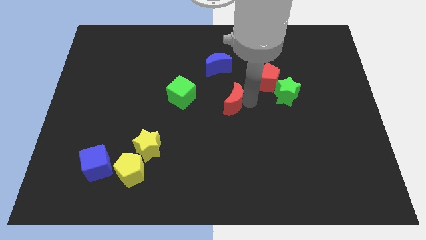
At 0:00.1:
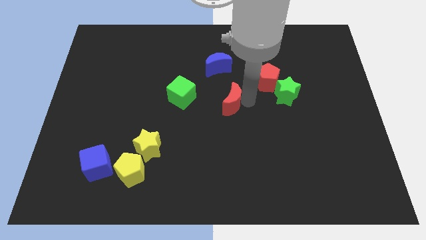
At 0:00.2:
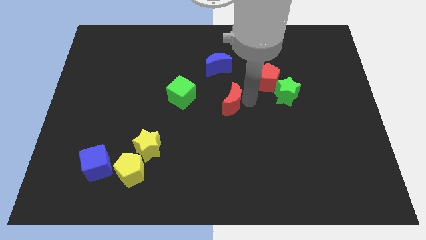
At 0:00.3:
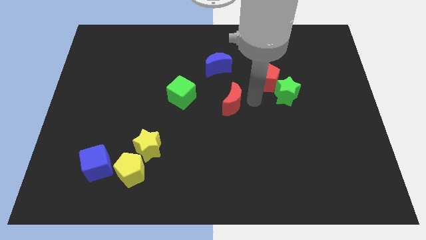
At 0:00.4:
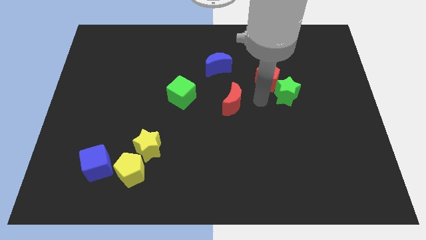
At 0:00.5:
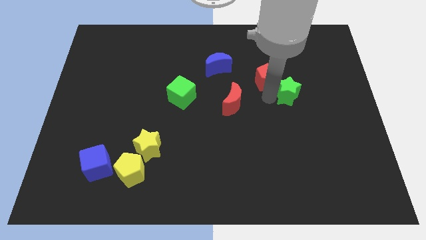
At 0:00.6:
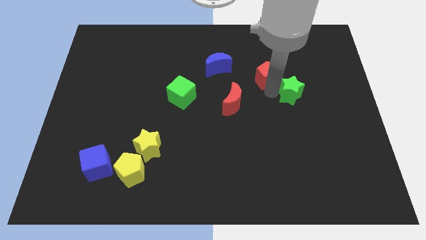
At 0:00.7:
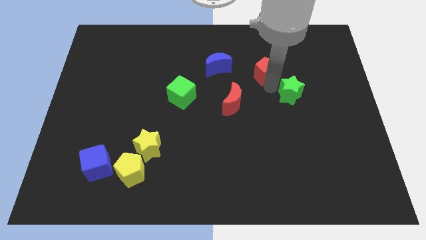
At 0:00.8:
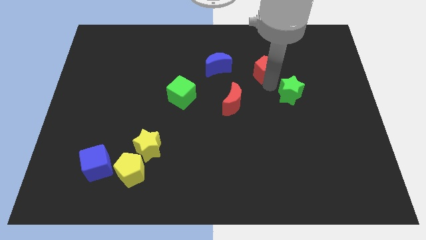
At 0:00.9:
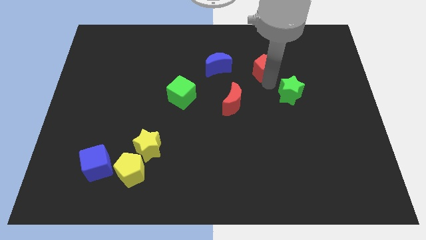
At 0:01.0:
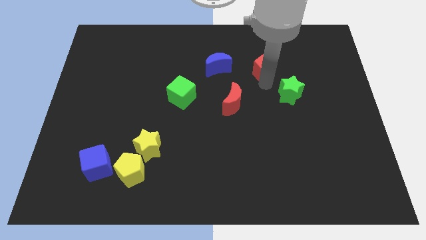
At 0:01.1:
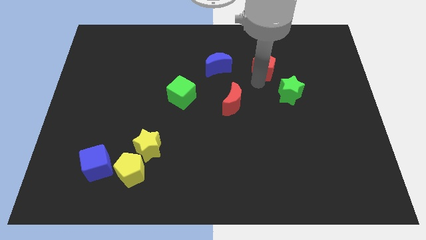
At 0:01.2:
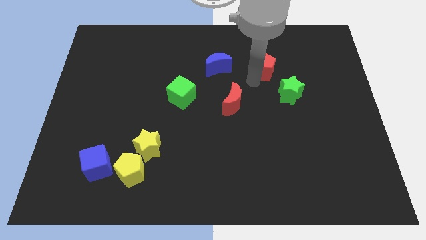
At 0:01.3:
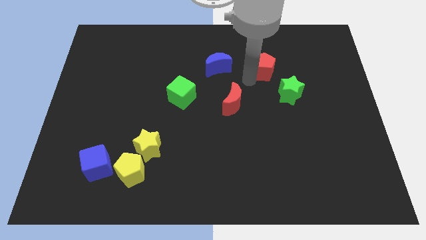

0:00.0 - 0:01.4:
separate the red pentagon and the green star

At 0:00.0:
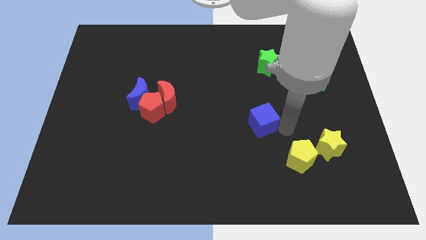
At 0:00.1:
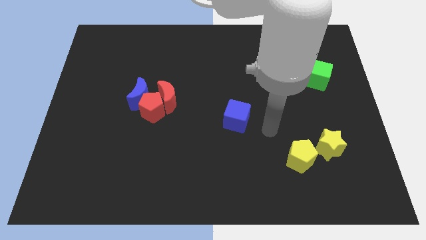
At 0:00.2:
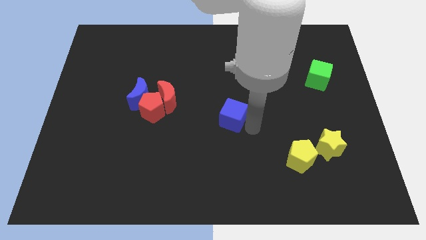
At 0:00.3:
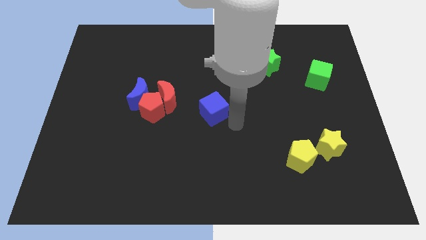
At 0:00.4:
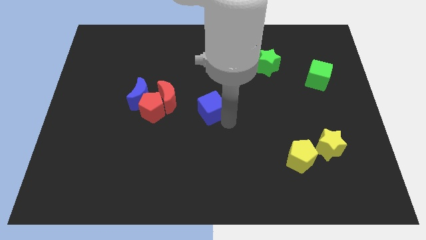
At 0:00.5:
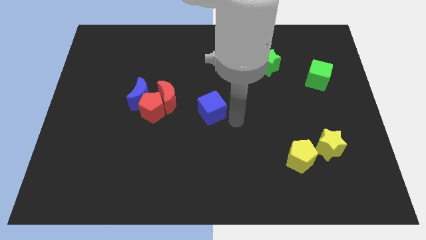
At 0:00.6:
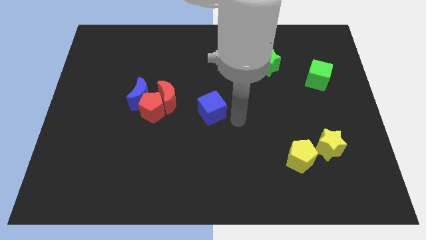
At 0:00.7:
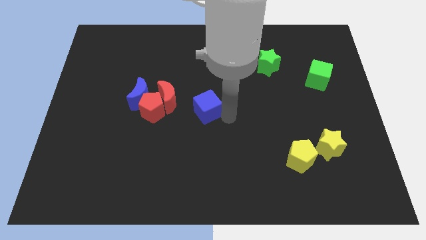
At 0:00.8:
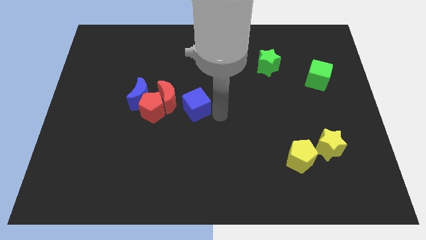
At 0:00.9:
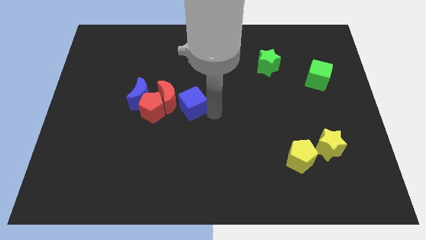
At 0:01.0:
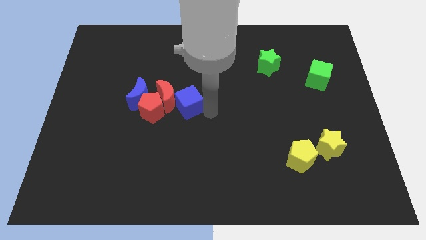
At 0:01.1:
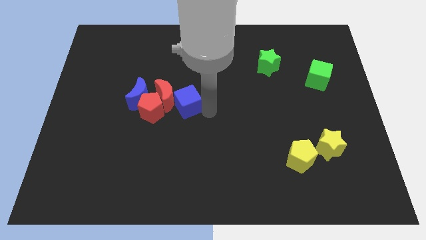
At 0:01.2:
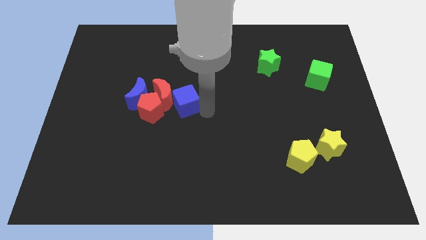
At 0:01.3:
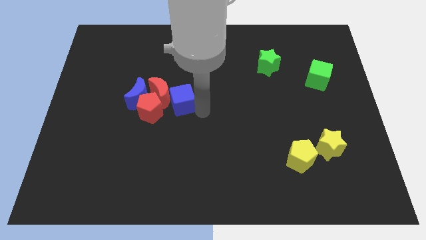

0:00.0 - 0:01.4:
place blue cube near red crescent

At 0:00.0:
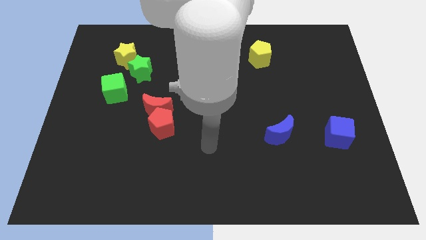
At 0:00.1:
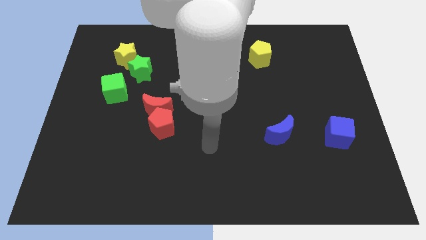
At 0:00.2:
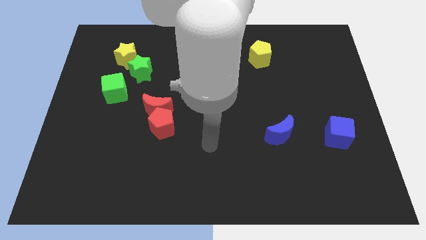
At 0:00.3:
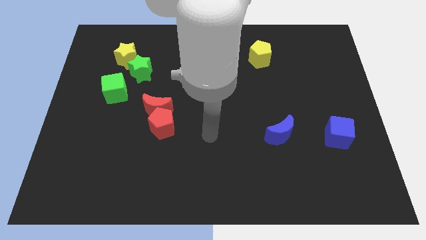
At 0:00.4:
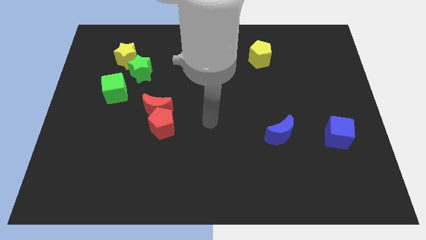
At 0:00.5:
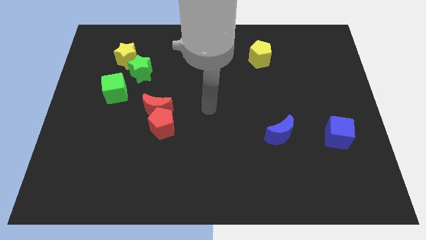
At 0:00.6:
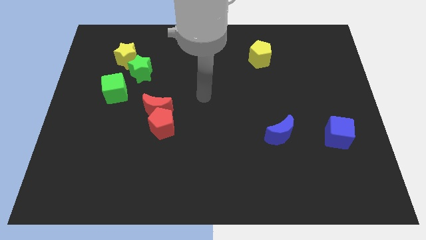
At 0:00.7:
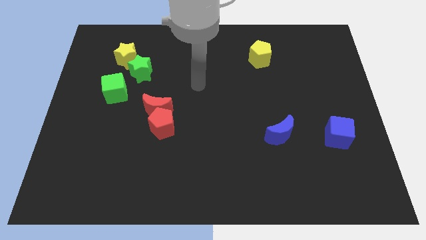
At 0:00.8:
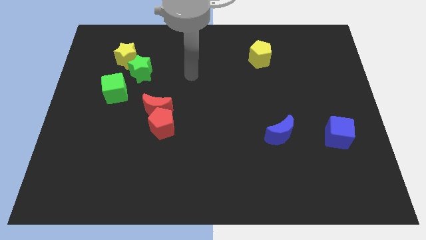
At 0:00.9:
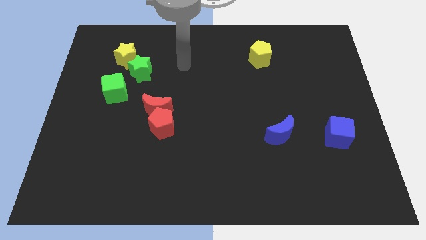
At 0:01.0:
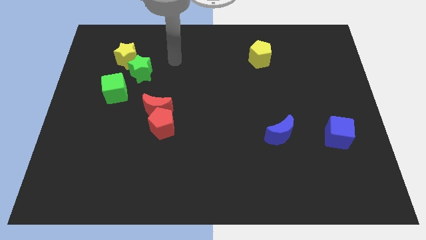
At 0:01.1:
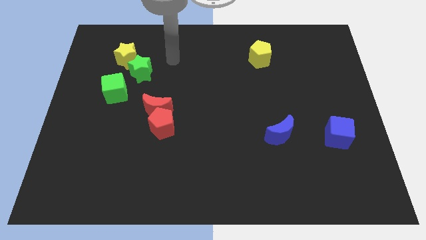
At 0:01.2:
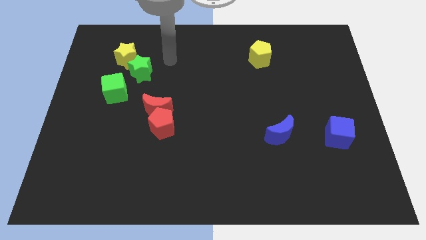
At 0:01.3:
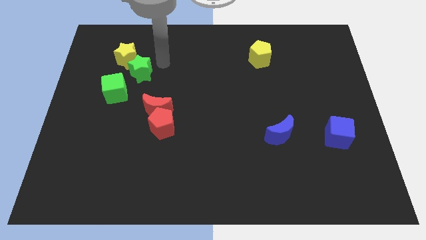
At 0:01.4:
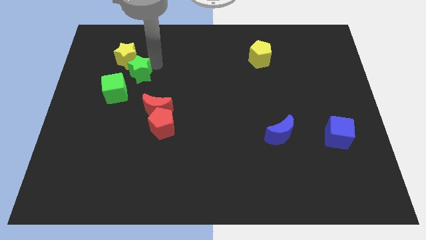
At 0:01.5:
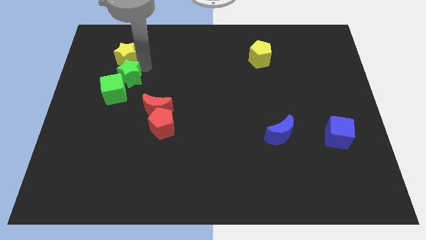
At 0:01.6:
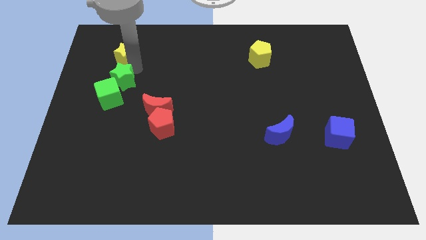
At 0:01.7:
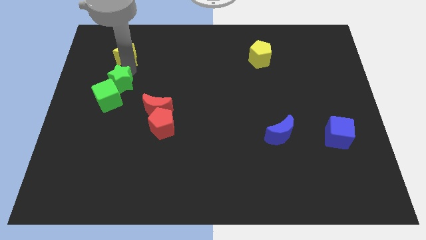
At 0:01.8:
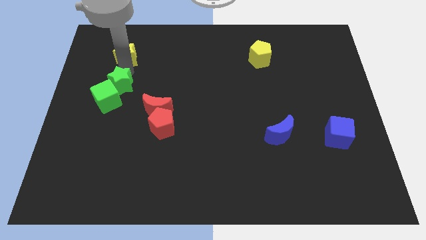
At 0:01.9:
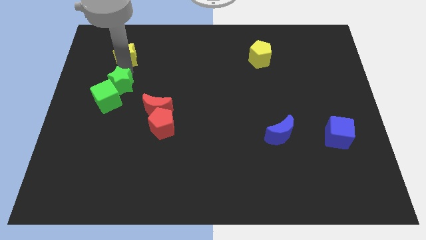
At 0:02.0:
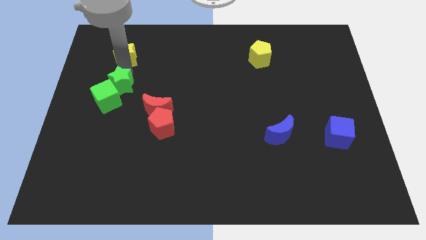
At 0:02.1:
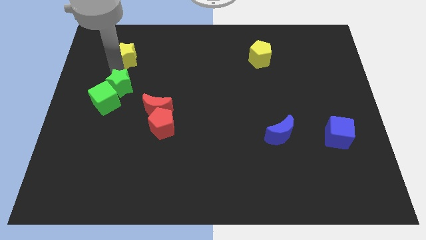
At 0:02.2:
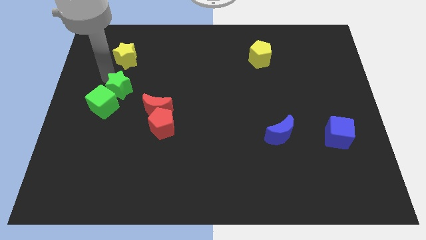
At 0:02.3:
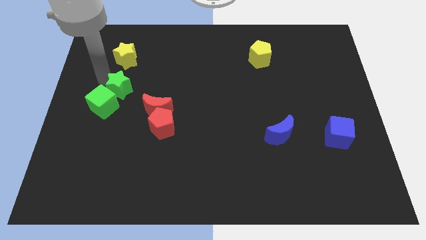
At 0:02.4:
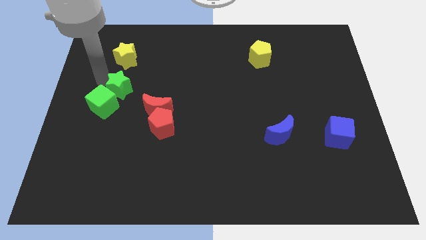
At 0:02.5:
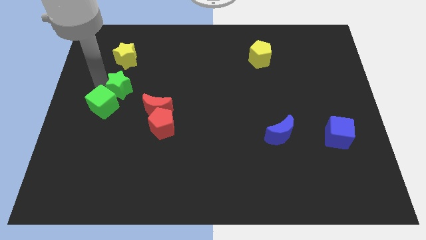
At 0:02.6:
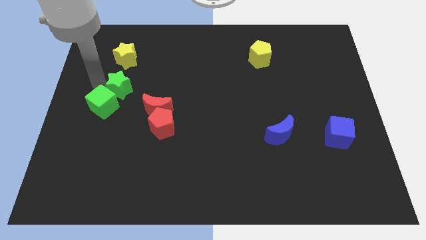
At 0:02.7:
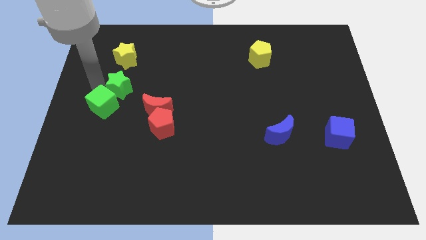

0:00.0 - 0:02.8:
move green star and green cube slightly to the left of the red moon

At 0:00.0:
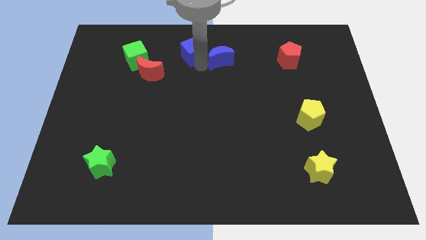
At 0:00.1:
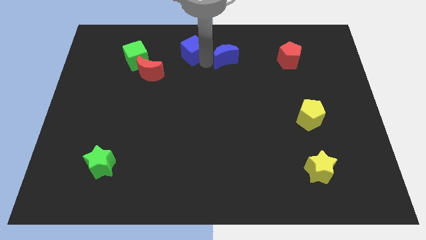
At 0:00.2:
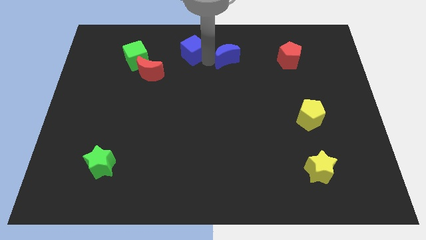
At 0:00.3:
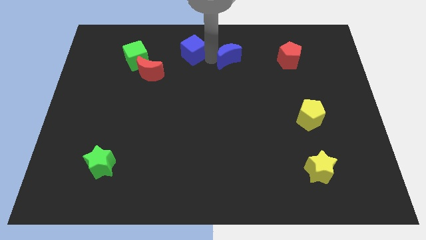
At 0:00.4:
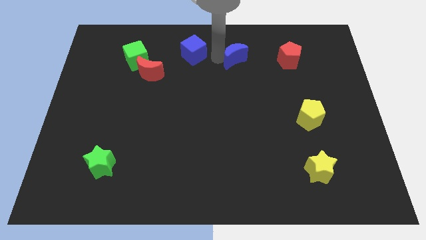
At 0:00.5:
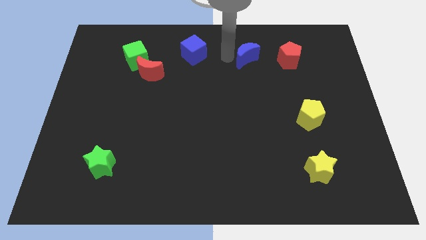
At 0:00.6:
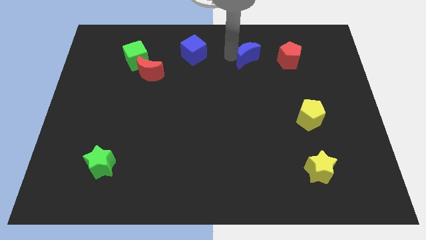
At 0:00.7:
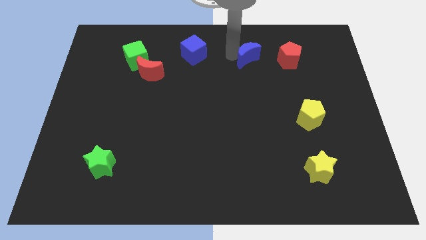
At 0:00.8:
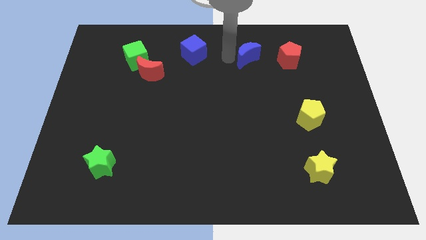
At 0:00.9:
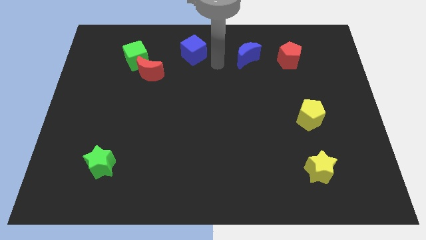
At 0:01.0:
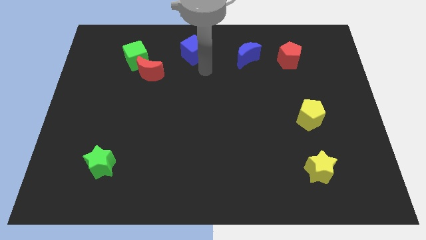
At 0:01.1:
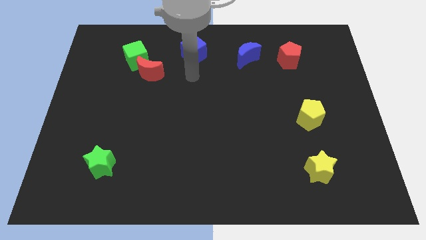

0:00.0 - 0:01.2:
place the blue crescent in between the red pentagon and blue cube to form a horizontal line

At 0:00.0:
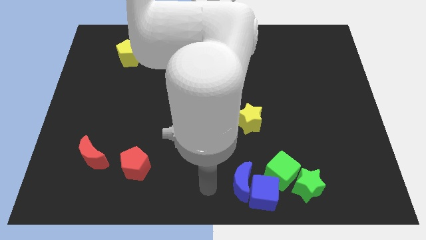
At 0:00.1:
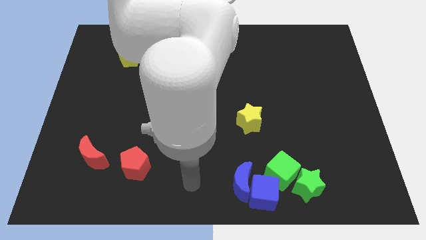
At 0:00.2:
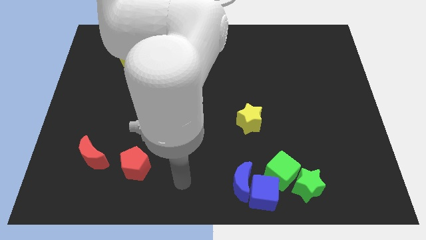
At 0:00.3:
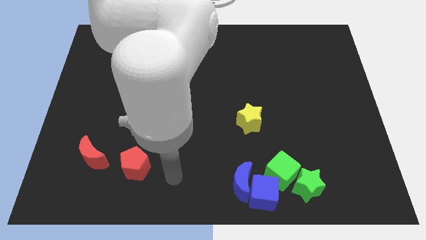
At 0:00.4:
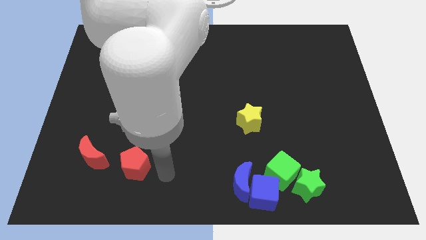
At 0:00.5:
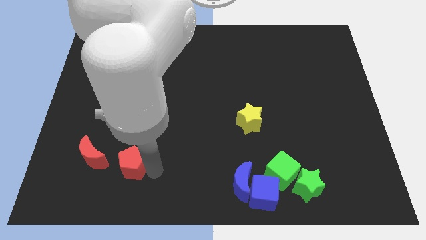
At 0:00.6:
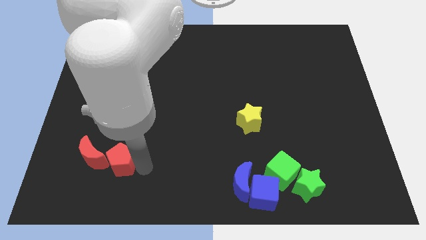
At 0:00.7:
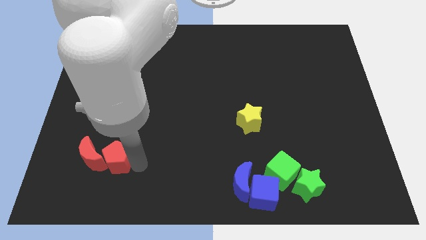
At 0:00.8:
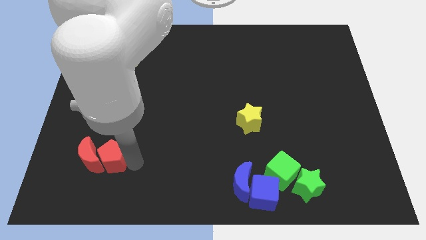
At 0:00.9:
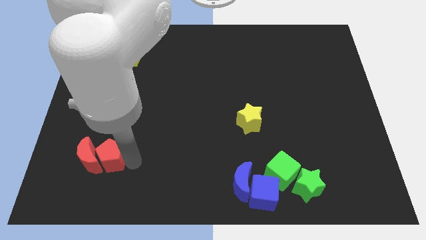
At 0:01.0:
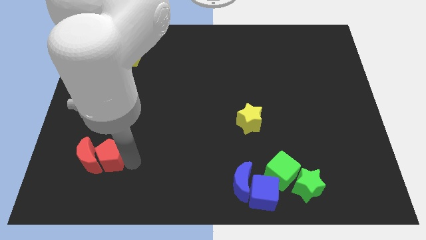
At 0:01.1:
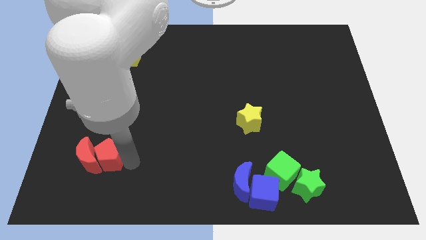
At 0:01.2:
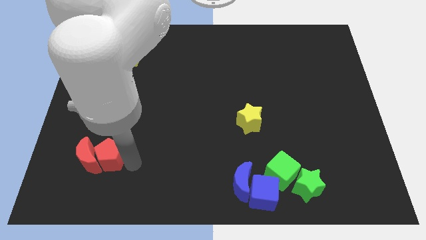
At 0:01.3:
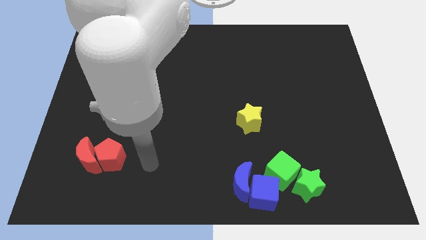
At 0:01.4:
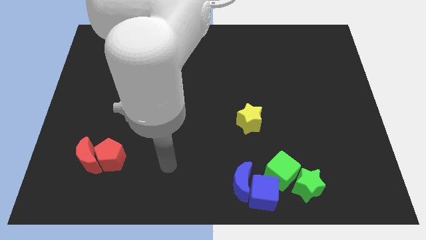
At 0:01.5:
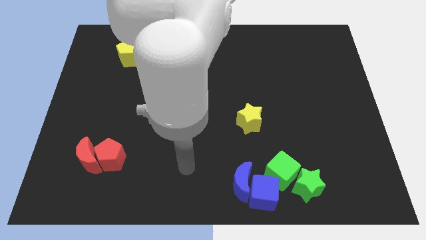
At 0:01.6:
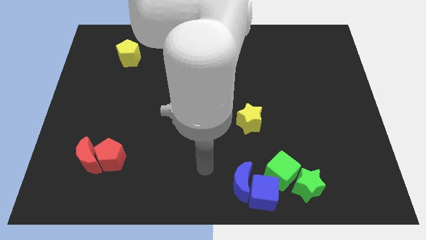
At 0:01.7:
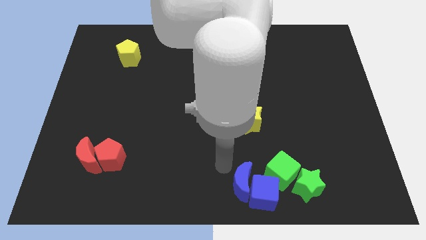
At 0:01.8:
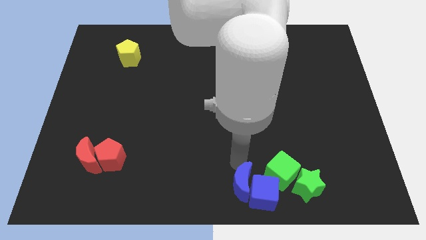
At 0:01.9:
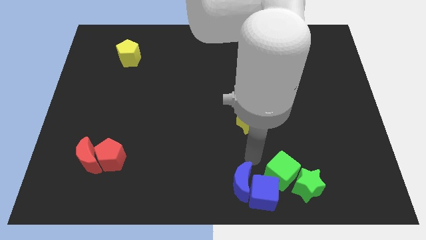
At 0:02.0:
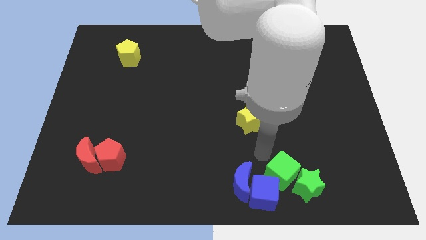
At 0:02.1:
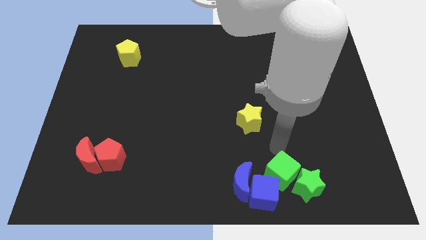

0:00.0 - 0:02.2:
push the red pentagon into the red moon

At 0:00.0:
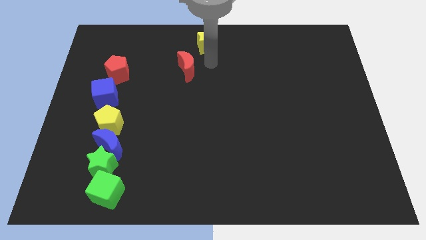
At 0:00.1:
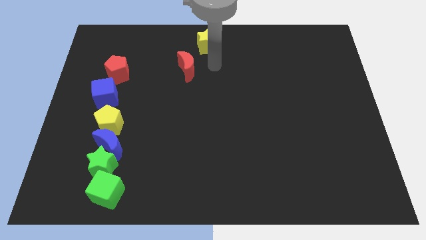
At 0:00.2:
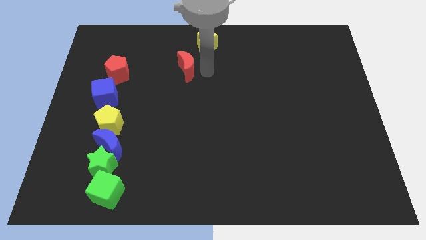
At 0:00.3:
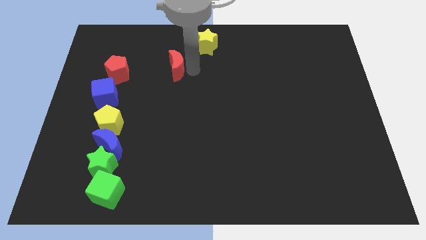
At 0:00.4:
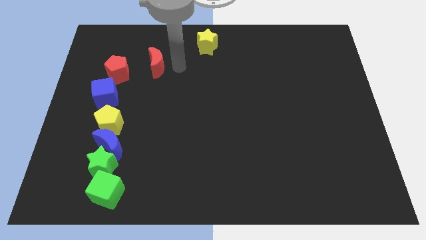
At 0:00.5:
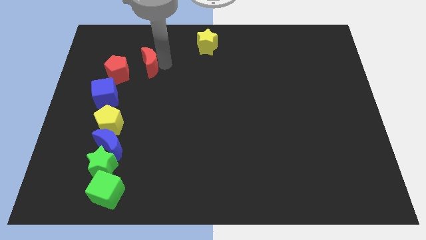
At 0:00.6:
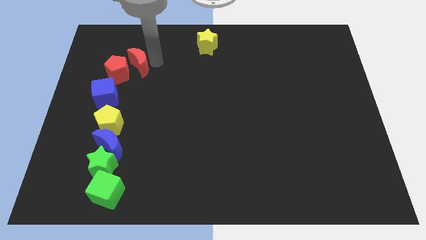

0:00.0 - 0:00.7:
push the red moon towards the red pentagon
